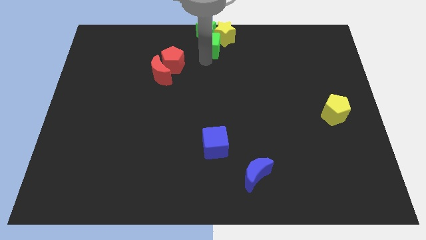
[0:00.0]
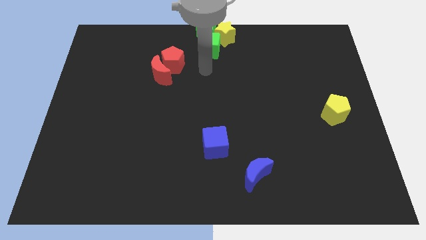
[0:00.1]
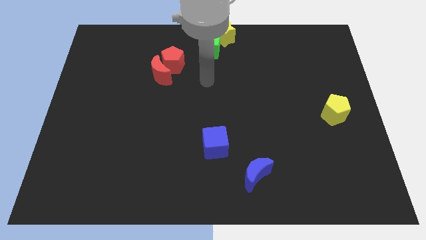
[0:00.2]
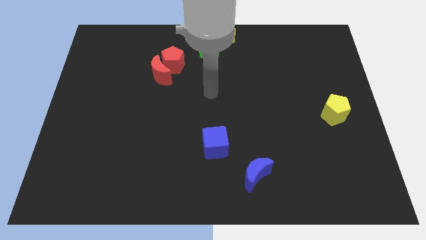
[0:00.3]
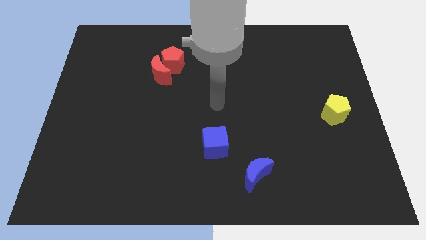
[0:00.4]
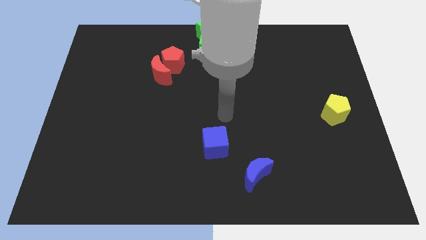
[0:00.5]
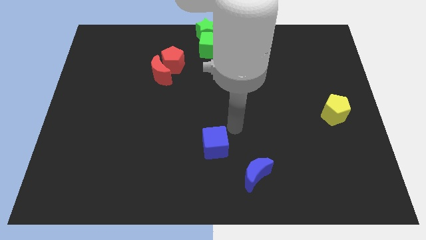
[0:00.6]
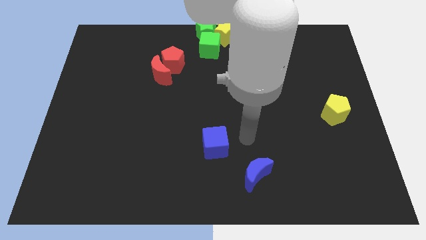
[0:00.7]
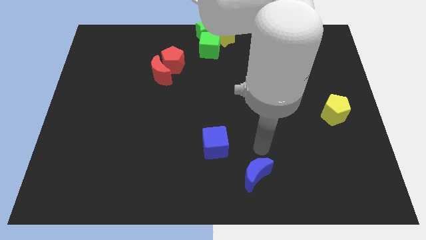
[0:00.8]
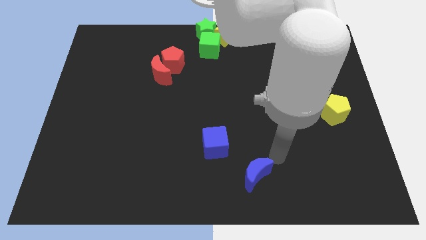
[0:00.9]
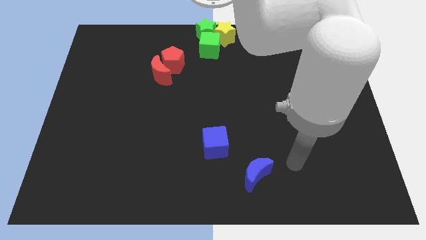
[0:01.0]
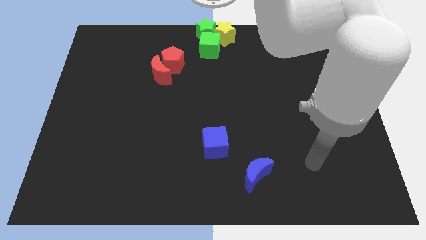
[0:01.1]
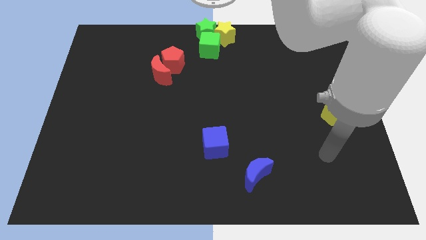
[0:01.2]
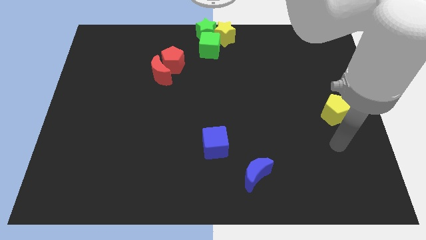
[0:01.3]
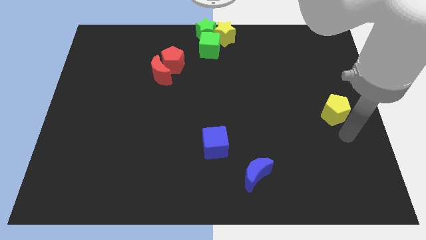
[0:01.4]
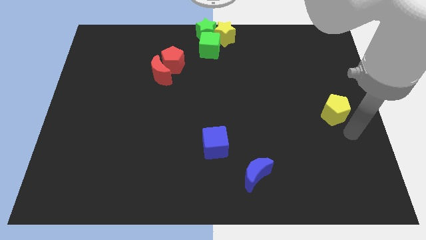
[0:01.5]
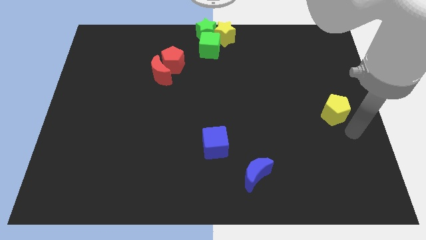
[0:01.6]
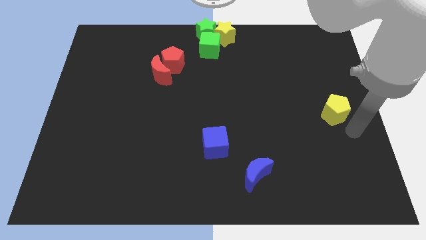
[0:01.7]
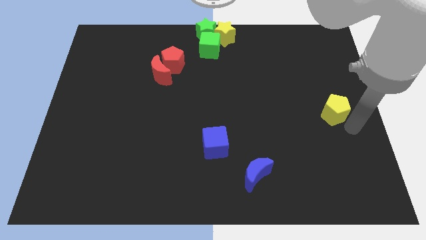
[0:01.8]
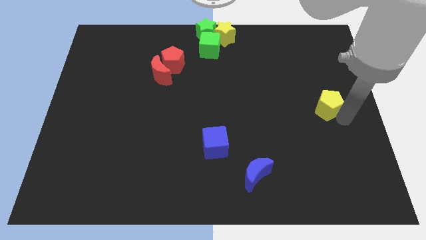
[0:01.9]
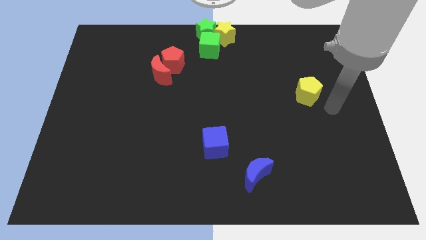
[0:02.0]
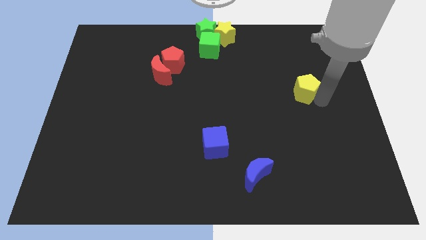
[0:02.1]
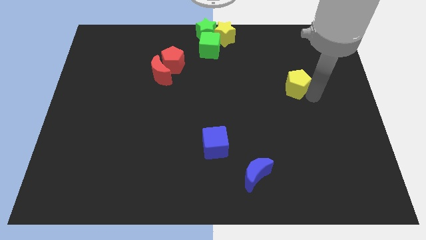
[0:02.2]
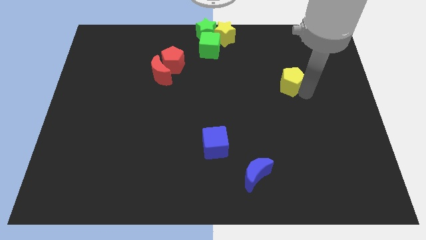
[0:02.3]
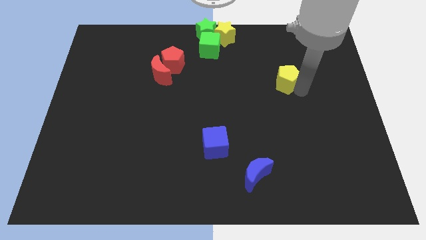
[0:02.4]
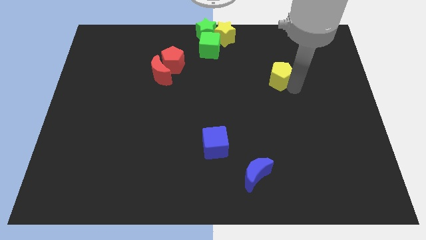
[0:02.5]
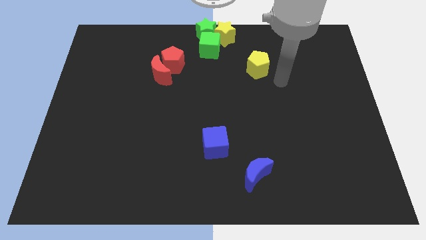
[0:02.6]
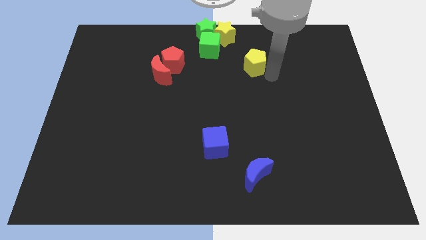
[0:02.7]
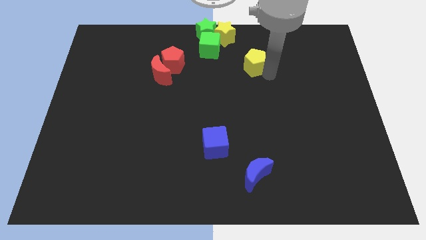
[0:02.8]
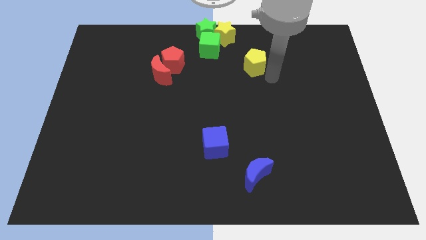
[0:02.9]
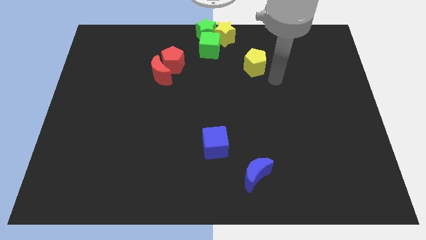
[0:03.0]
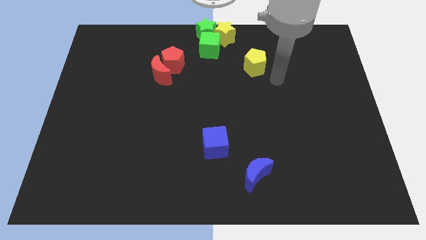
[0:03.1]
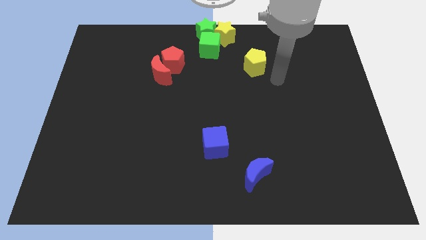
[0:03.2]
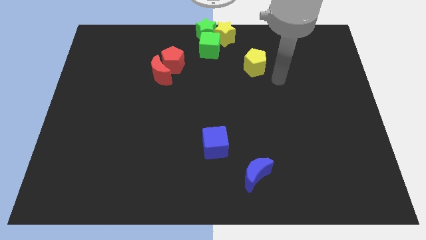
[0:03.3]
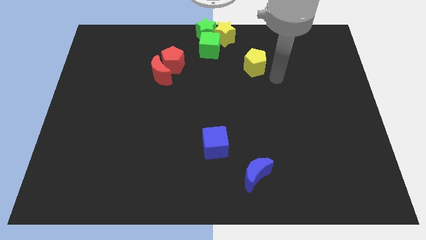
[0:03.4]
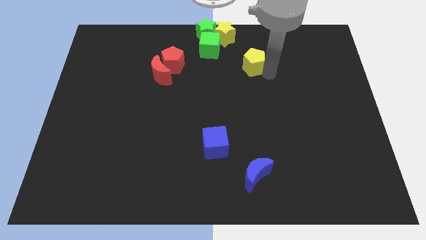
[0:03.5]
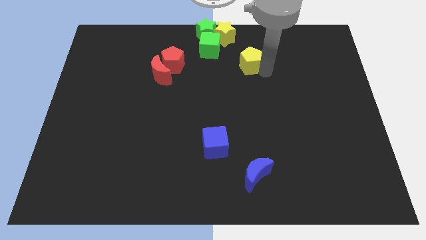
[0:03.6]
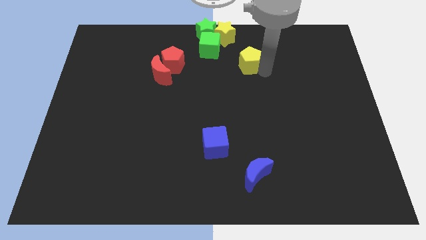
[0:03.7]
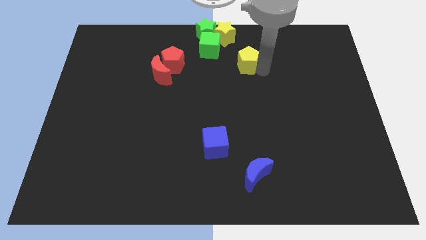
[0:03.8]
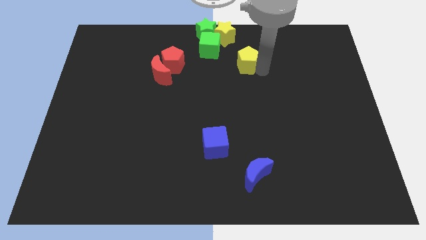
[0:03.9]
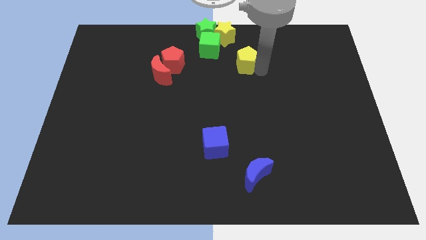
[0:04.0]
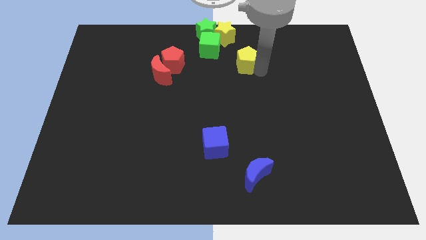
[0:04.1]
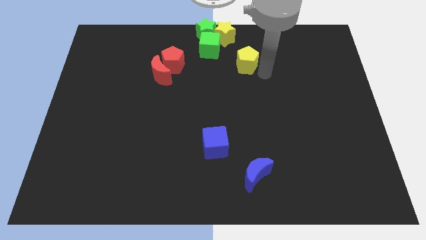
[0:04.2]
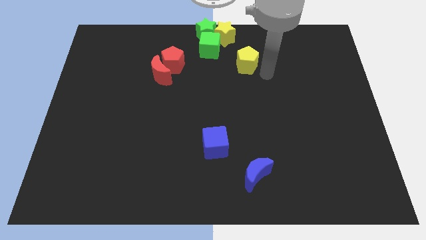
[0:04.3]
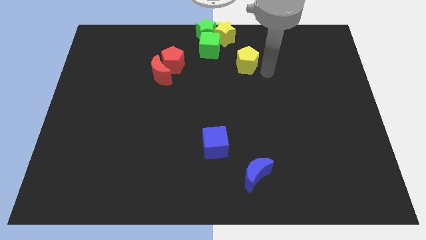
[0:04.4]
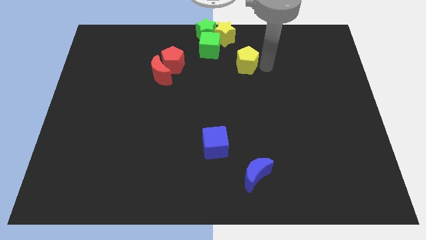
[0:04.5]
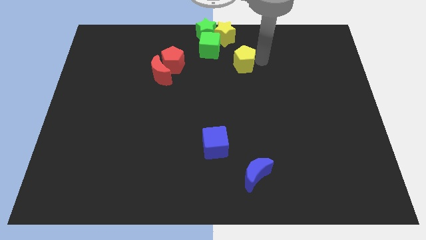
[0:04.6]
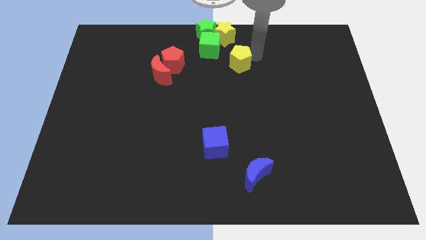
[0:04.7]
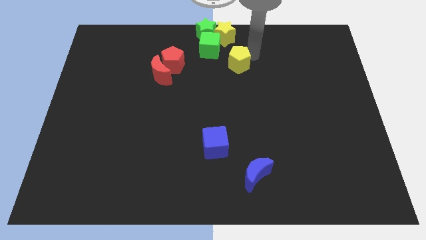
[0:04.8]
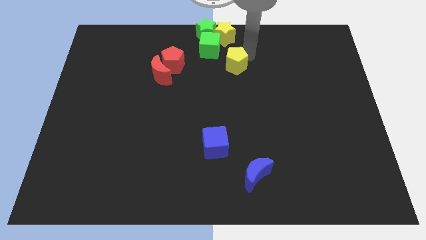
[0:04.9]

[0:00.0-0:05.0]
push the yellow pentagon towards the green cube

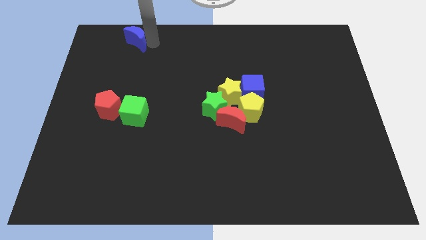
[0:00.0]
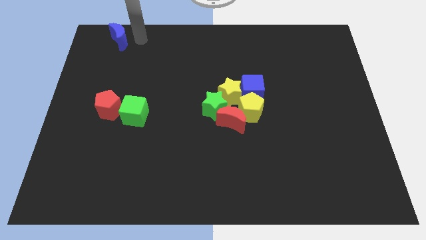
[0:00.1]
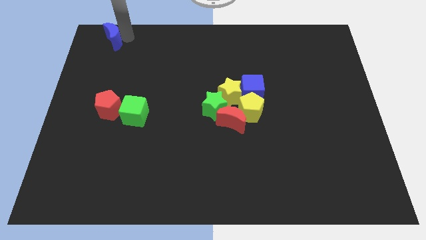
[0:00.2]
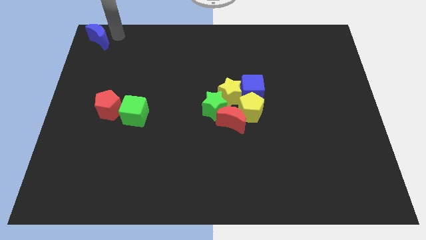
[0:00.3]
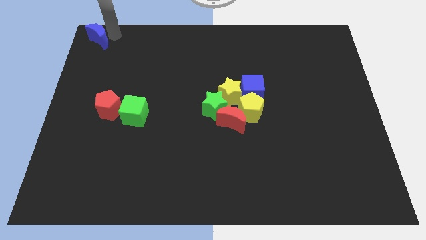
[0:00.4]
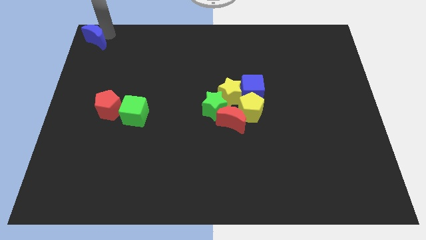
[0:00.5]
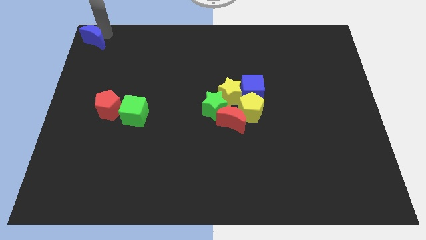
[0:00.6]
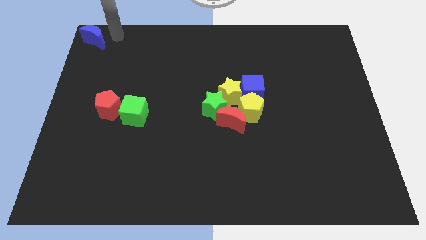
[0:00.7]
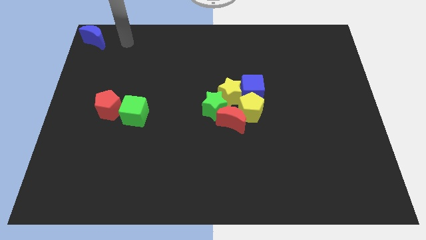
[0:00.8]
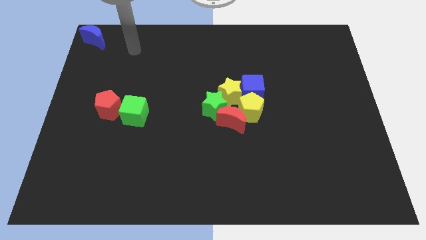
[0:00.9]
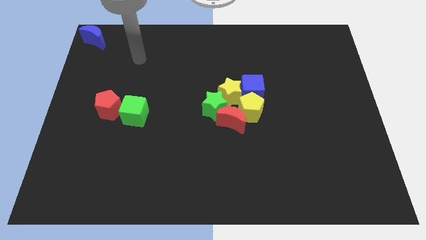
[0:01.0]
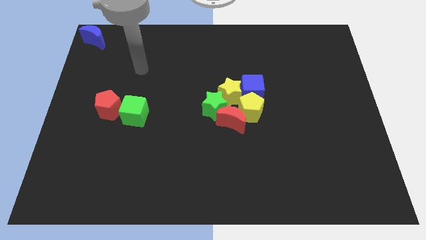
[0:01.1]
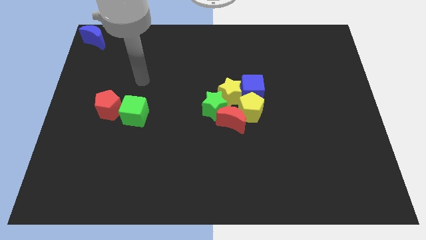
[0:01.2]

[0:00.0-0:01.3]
move blue moon left top corner of the board

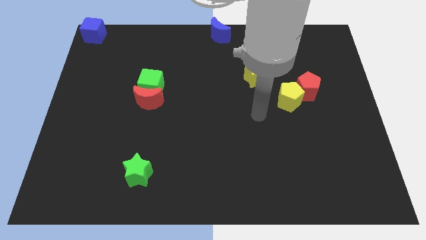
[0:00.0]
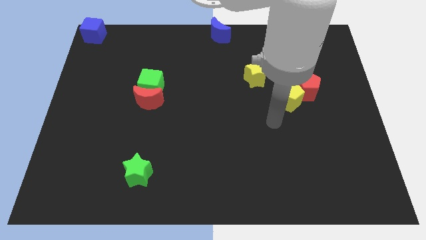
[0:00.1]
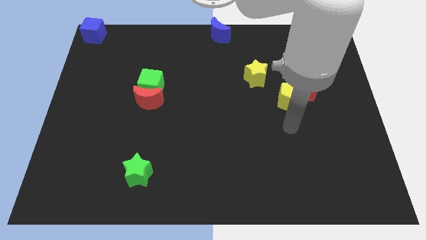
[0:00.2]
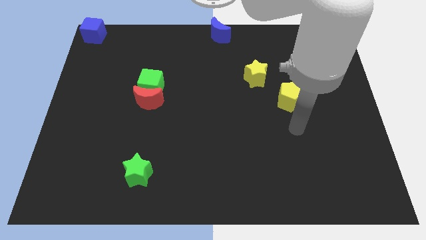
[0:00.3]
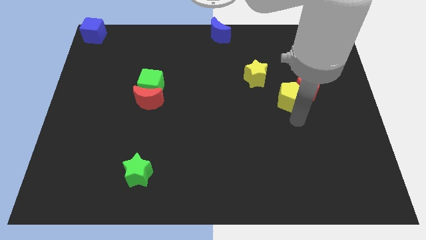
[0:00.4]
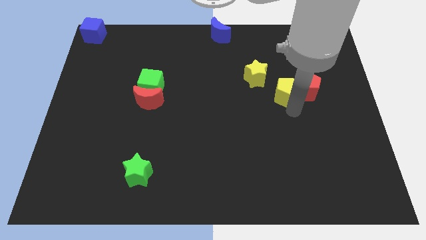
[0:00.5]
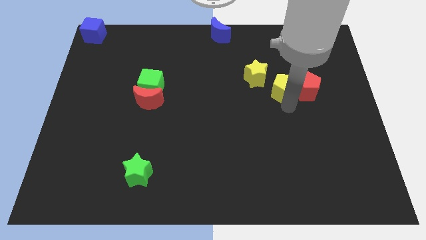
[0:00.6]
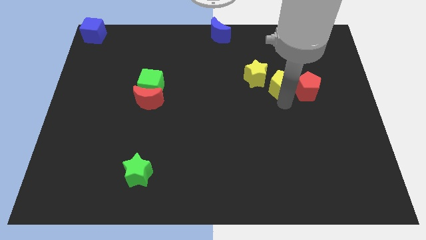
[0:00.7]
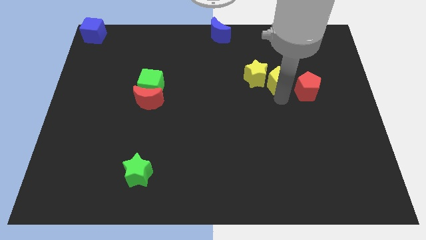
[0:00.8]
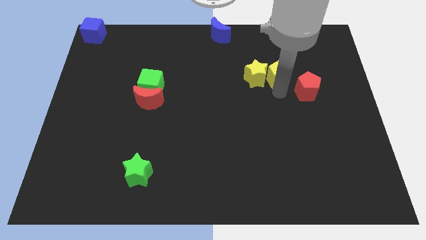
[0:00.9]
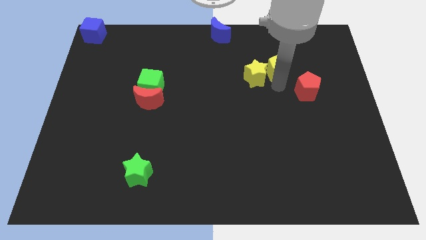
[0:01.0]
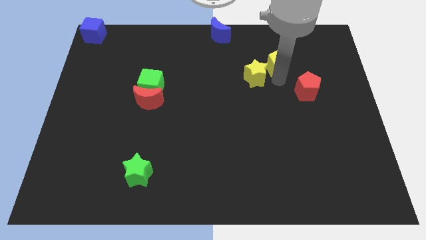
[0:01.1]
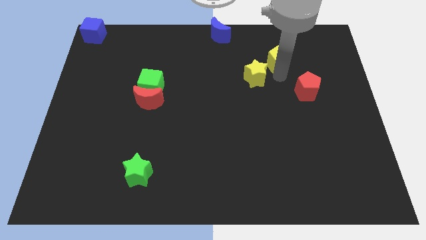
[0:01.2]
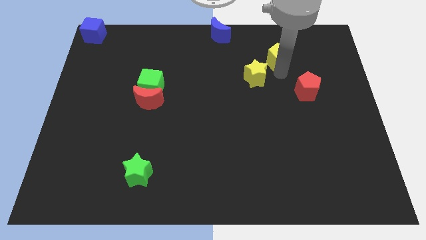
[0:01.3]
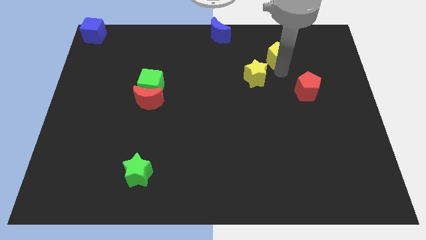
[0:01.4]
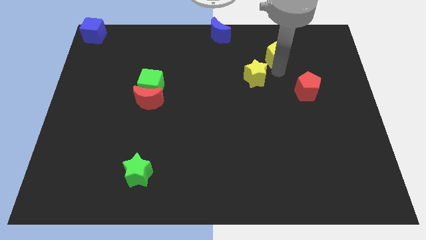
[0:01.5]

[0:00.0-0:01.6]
separate the yellow pentagon from the red pentagon

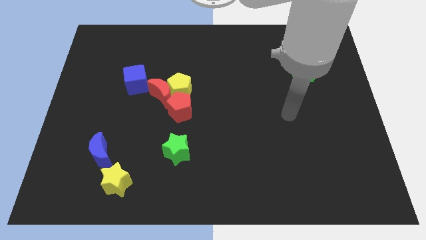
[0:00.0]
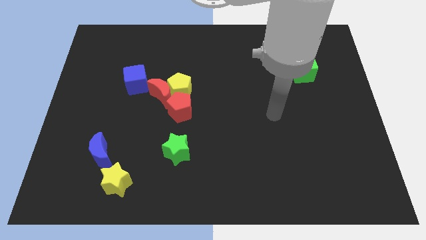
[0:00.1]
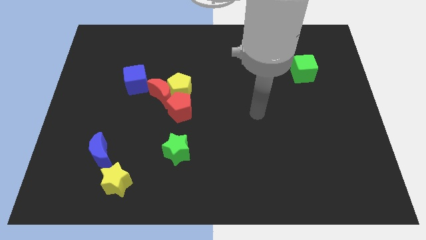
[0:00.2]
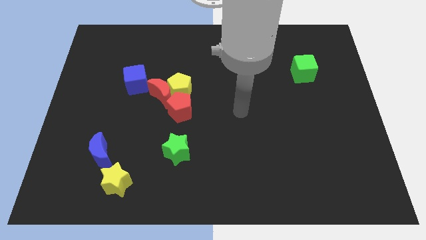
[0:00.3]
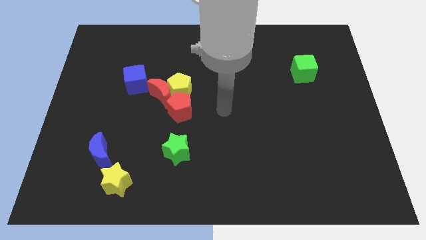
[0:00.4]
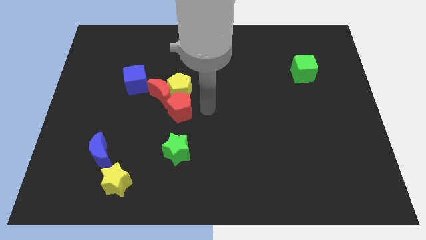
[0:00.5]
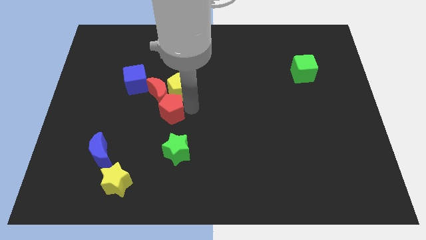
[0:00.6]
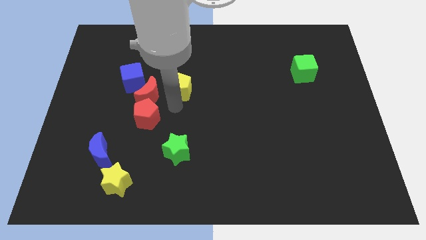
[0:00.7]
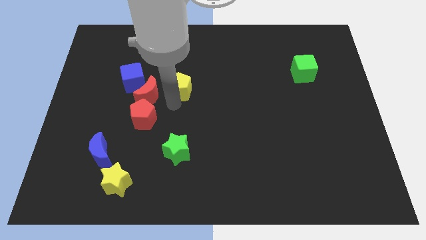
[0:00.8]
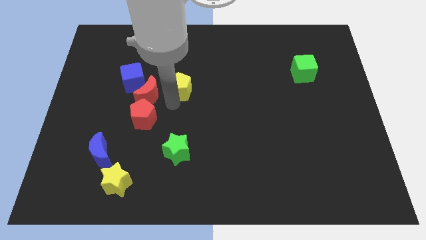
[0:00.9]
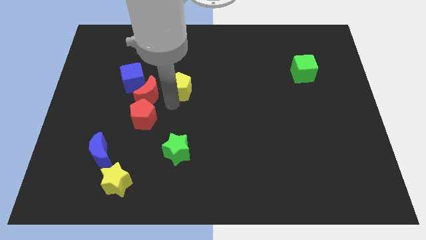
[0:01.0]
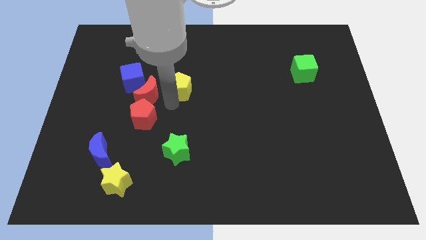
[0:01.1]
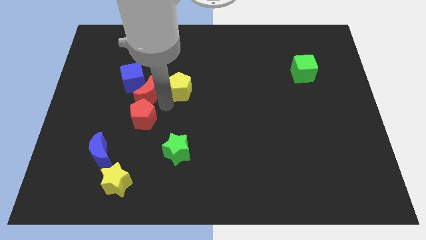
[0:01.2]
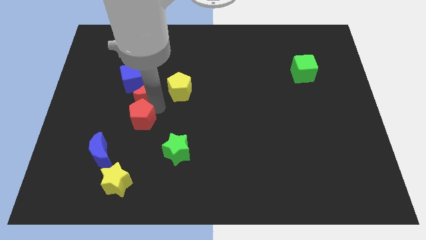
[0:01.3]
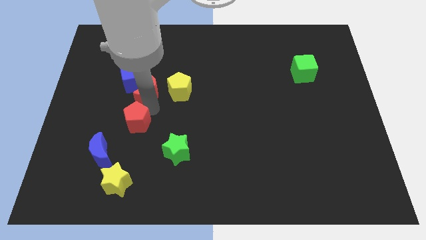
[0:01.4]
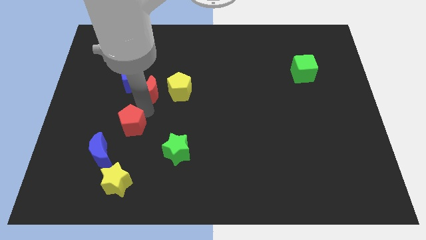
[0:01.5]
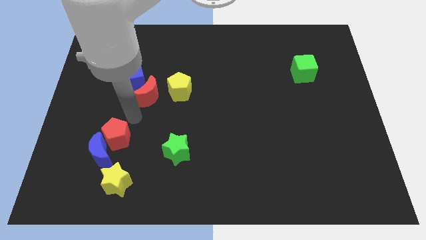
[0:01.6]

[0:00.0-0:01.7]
push the red pentagon above the blue crescent
